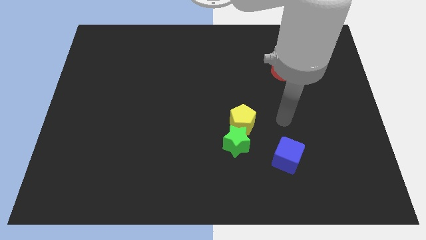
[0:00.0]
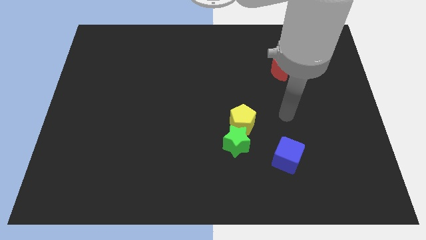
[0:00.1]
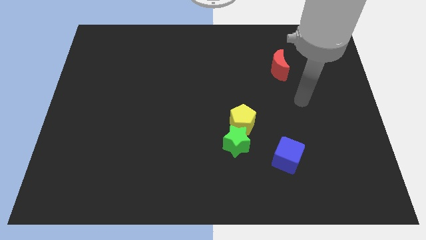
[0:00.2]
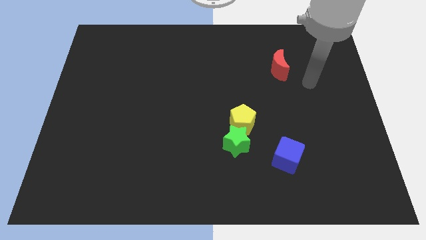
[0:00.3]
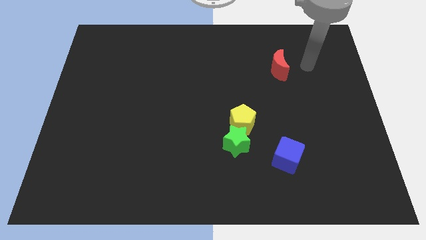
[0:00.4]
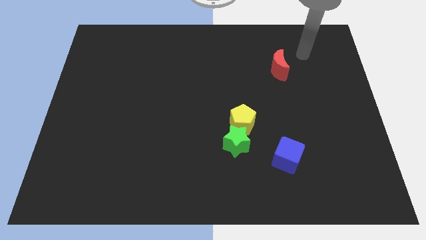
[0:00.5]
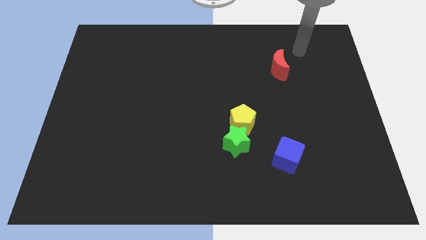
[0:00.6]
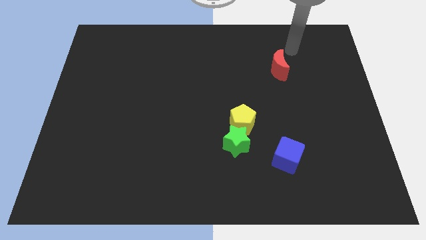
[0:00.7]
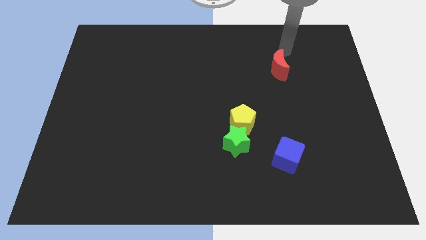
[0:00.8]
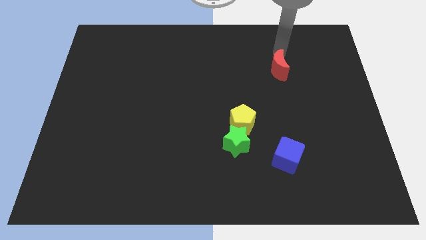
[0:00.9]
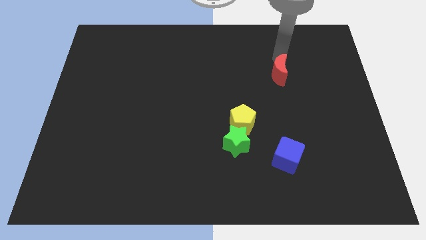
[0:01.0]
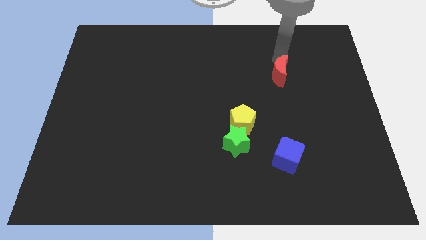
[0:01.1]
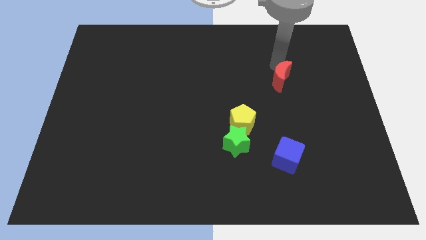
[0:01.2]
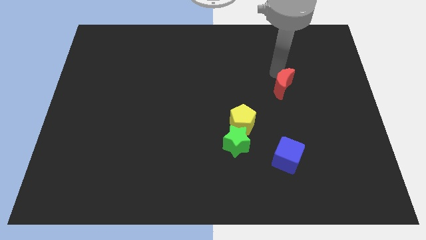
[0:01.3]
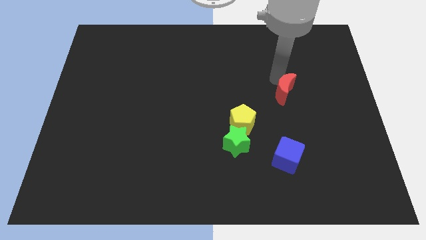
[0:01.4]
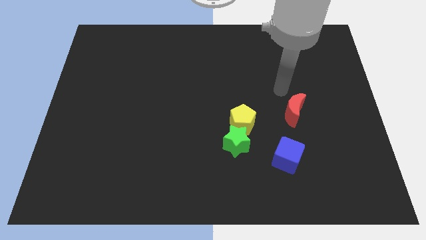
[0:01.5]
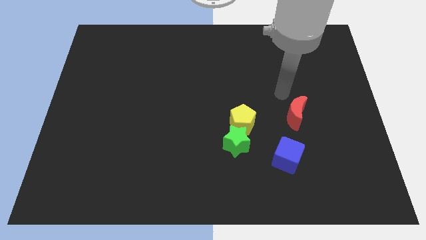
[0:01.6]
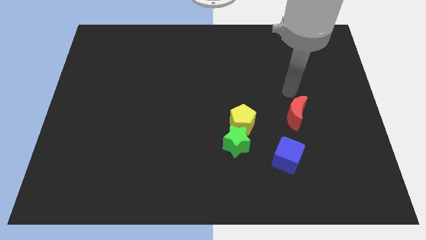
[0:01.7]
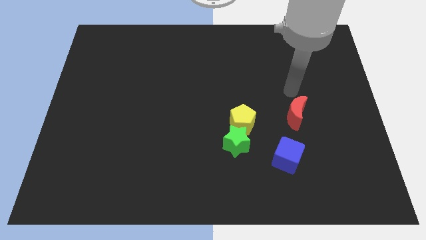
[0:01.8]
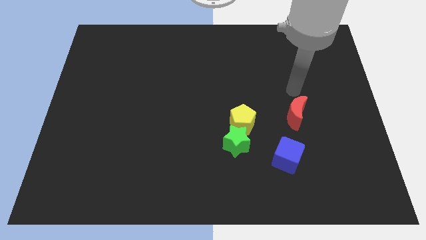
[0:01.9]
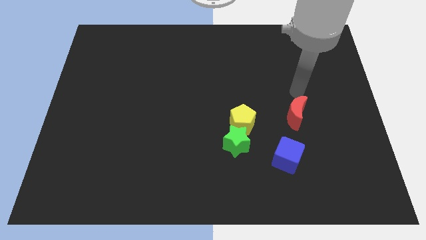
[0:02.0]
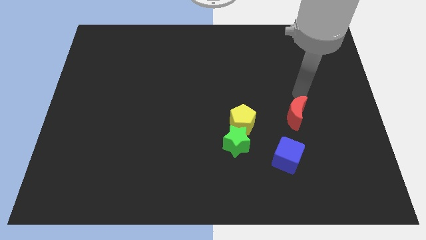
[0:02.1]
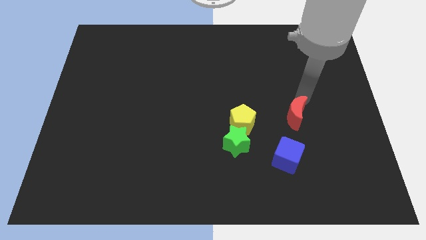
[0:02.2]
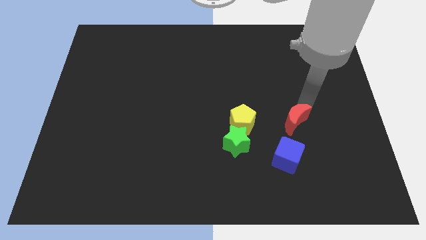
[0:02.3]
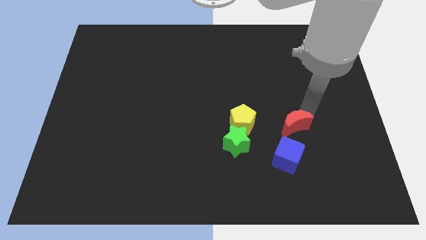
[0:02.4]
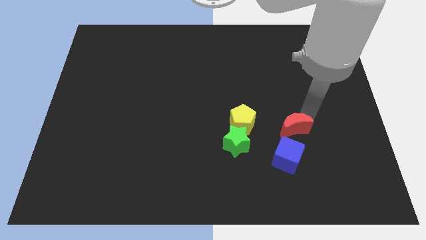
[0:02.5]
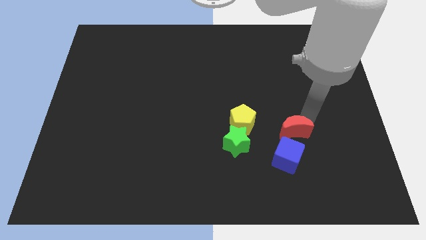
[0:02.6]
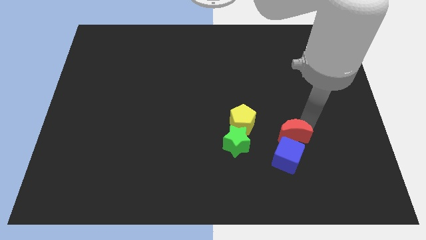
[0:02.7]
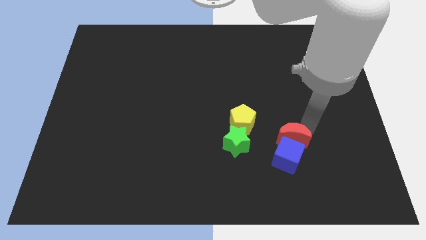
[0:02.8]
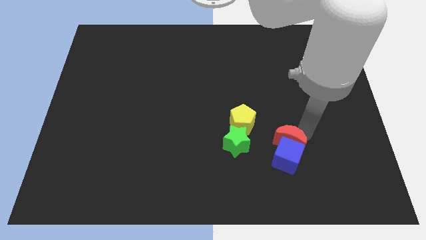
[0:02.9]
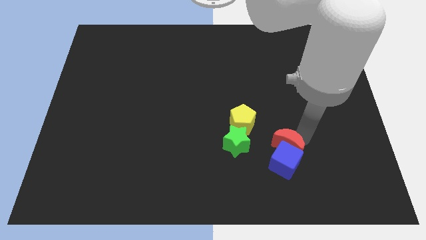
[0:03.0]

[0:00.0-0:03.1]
put the moon towards the blue block

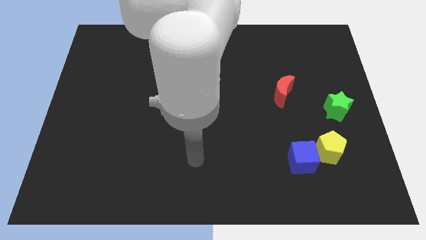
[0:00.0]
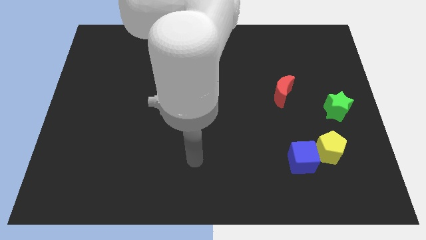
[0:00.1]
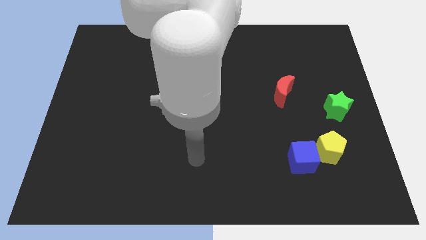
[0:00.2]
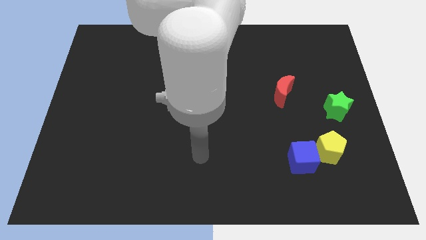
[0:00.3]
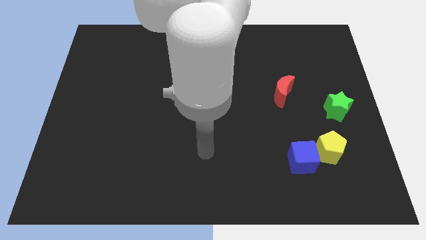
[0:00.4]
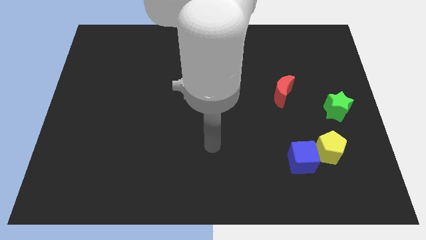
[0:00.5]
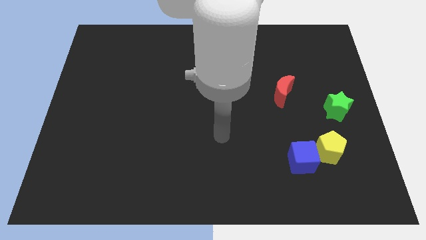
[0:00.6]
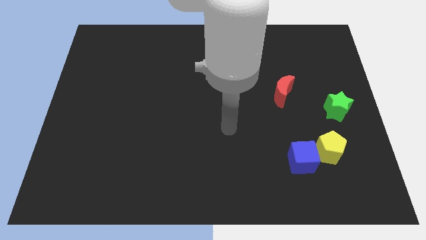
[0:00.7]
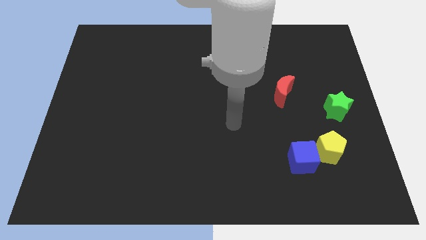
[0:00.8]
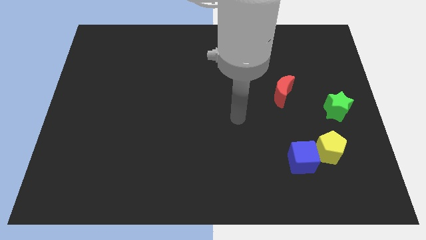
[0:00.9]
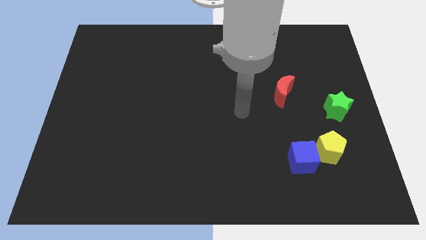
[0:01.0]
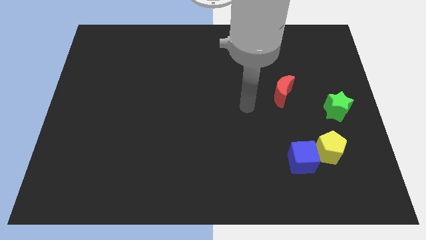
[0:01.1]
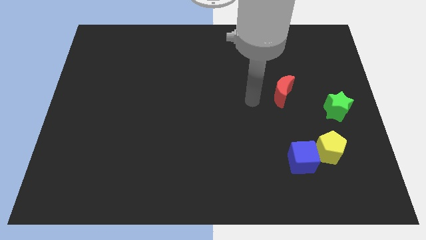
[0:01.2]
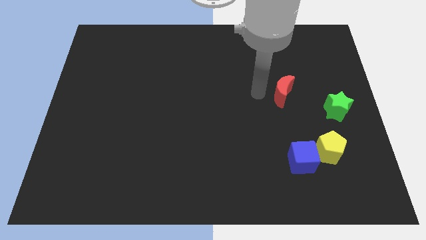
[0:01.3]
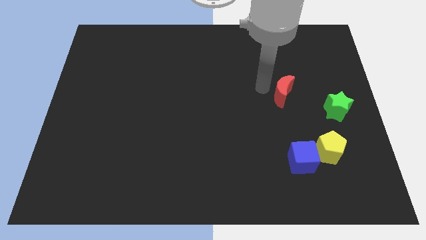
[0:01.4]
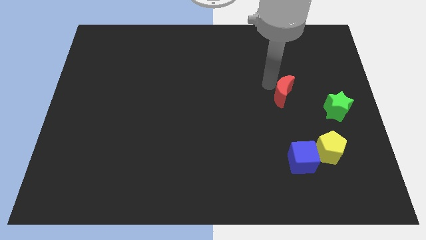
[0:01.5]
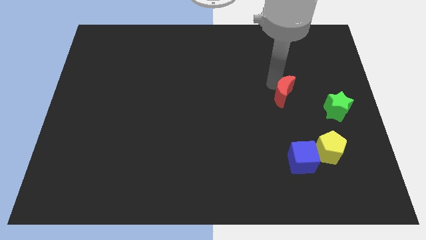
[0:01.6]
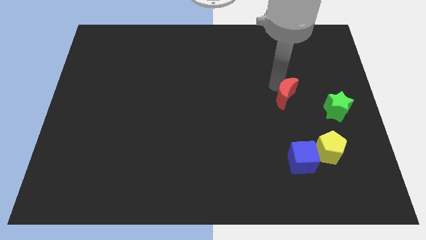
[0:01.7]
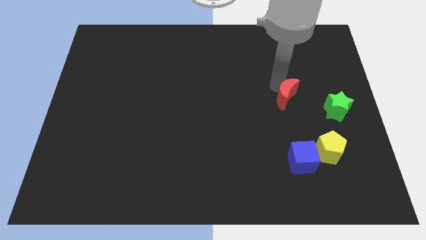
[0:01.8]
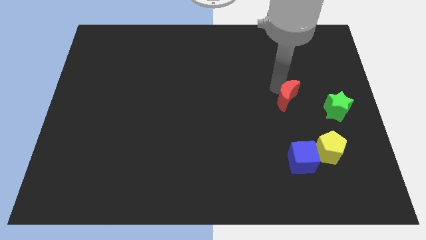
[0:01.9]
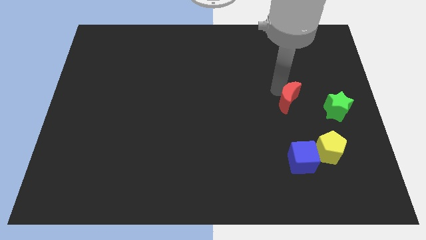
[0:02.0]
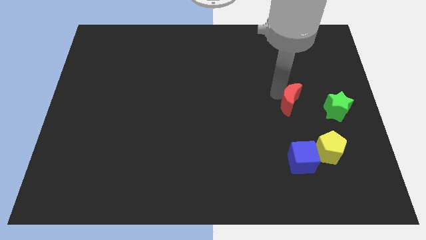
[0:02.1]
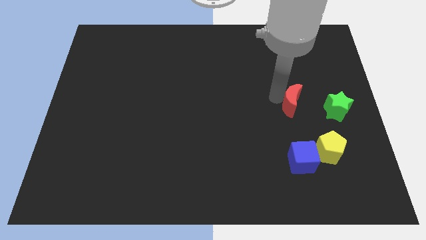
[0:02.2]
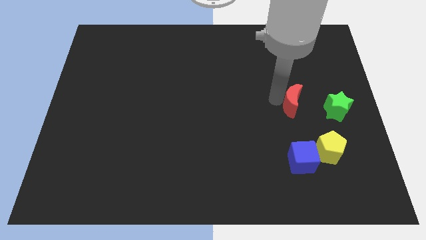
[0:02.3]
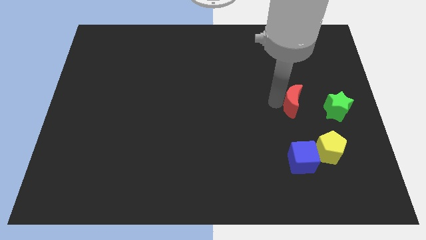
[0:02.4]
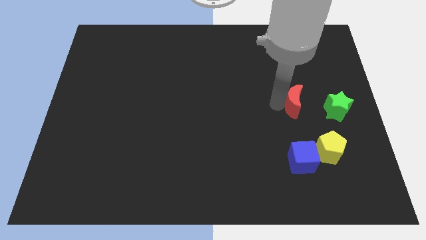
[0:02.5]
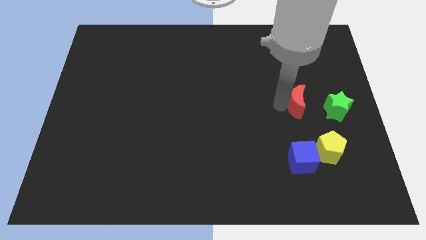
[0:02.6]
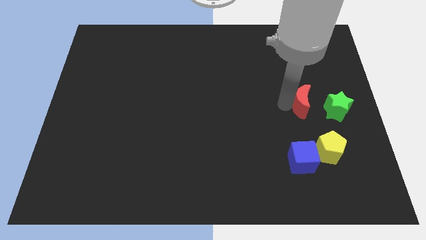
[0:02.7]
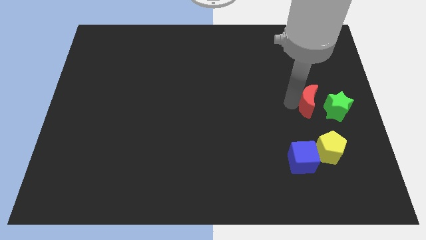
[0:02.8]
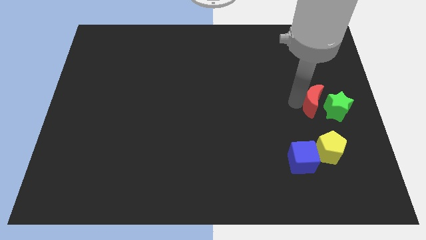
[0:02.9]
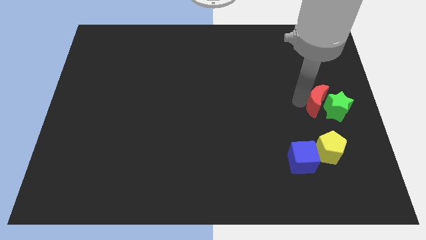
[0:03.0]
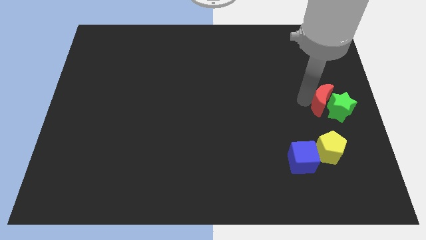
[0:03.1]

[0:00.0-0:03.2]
move the red block towards the green star

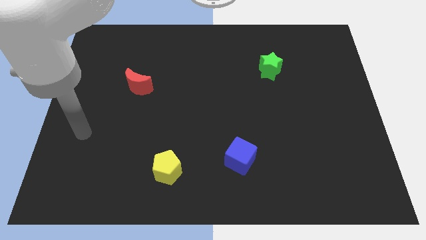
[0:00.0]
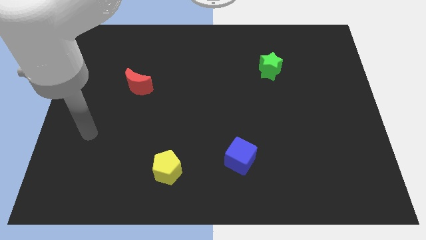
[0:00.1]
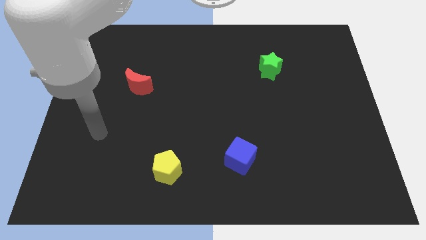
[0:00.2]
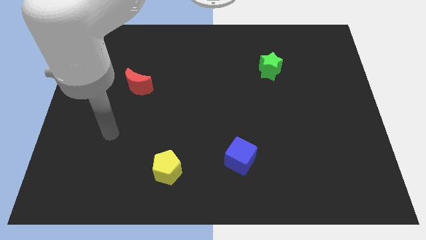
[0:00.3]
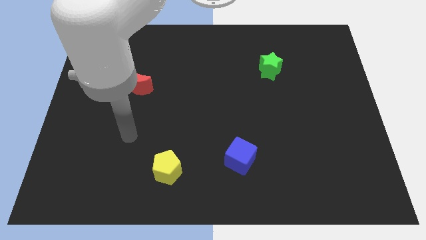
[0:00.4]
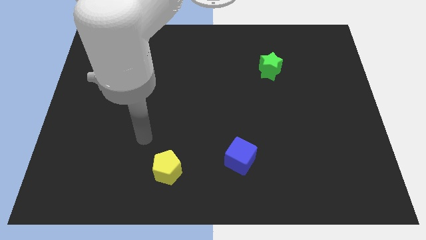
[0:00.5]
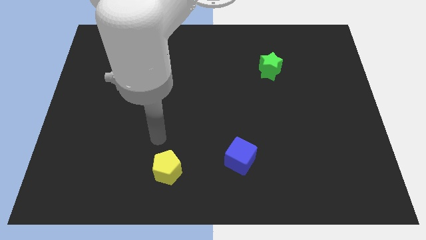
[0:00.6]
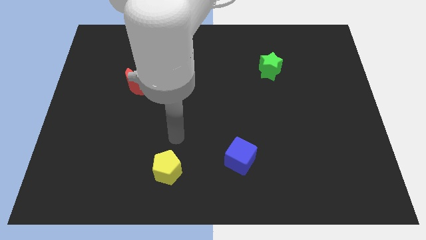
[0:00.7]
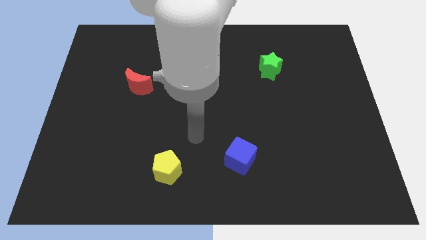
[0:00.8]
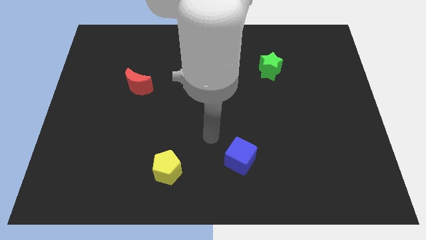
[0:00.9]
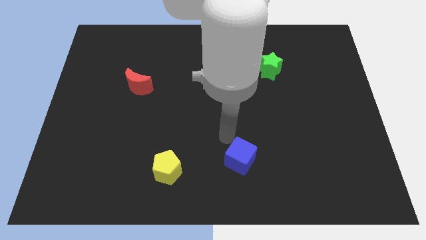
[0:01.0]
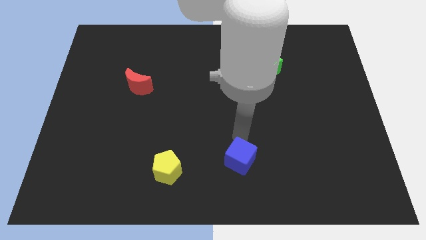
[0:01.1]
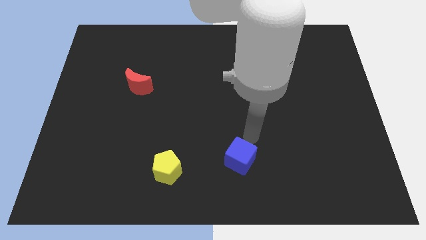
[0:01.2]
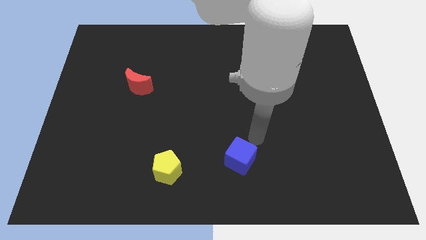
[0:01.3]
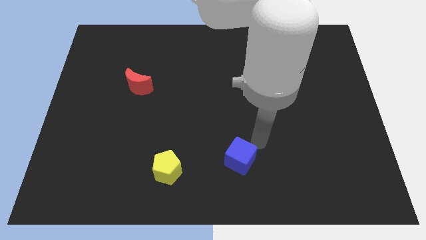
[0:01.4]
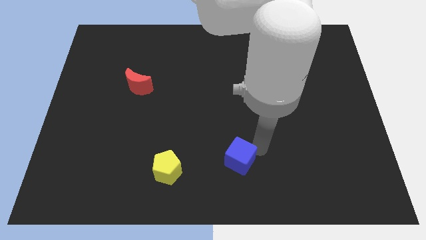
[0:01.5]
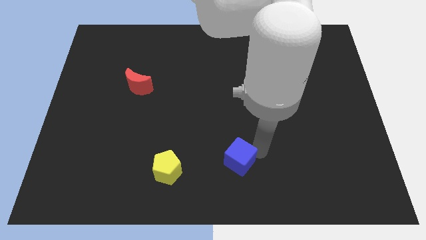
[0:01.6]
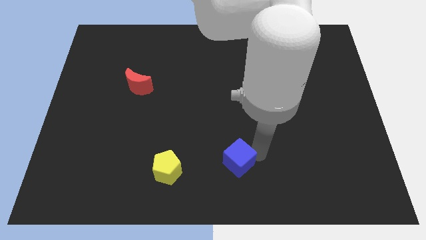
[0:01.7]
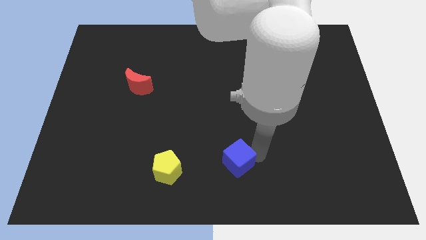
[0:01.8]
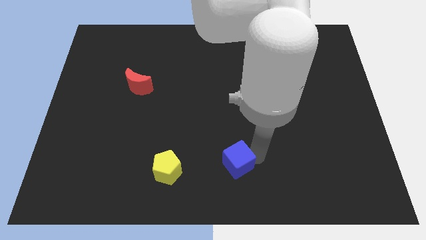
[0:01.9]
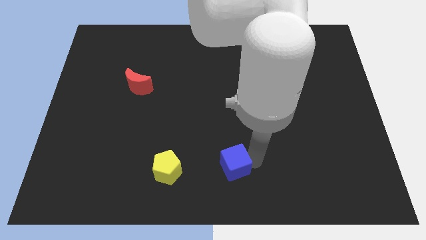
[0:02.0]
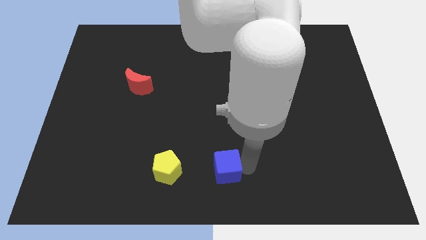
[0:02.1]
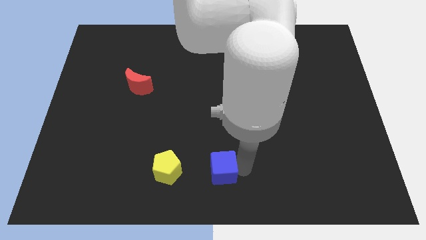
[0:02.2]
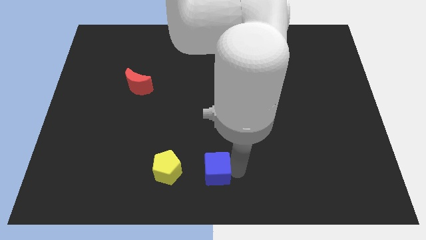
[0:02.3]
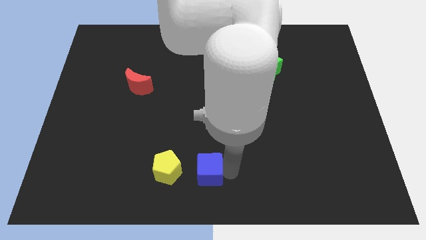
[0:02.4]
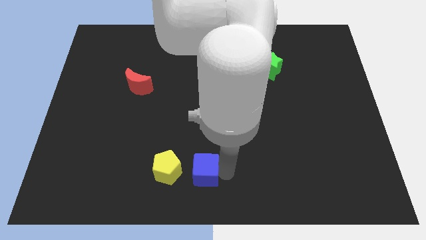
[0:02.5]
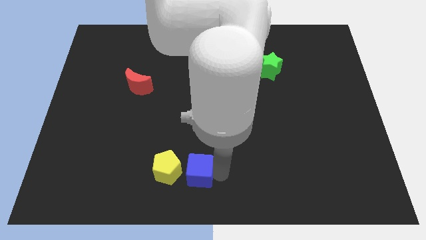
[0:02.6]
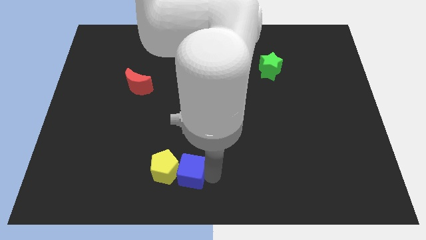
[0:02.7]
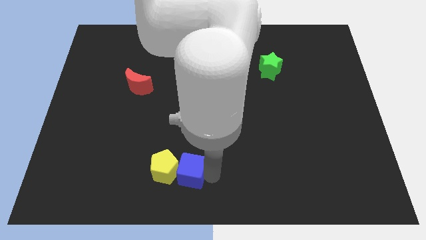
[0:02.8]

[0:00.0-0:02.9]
push the blue block to the yellow block
